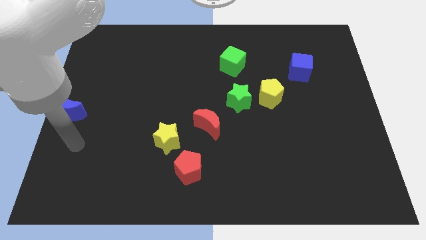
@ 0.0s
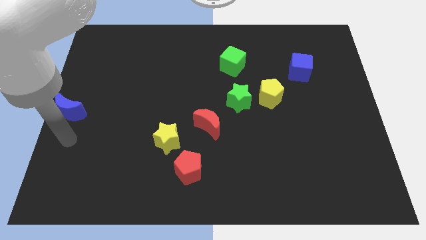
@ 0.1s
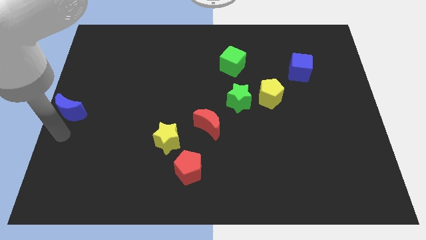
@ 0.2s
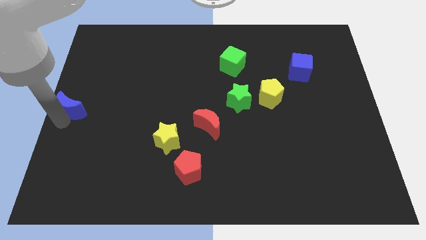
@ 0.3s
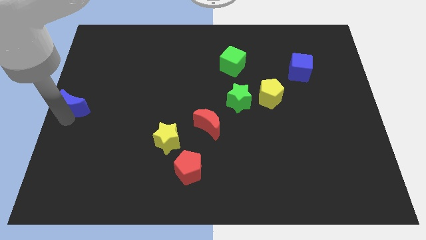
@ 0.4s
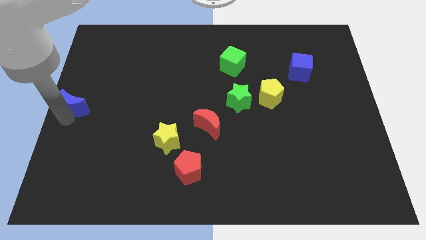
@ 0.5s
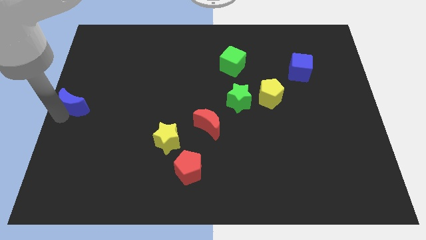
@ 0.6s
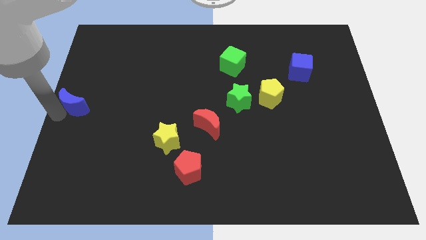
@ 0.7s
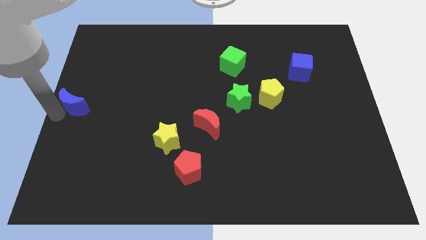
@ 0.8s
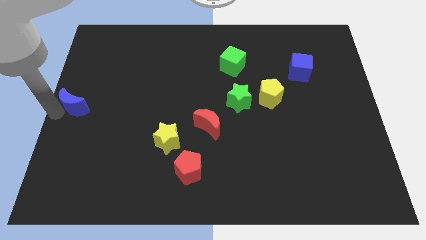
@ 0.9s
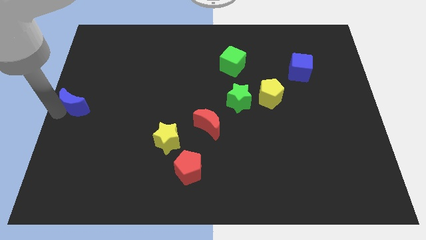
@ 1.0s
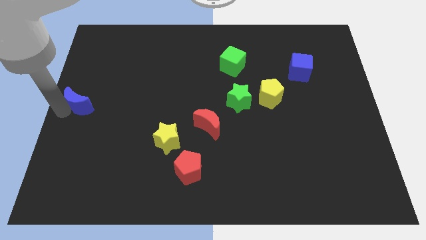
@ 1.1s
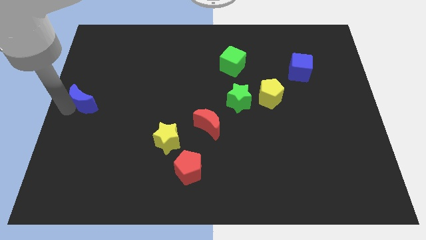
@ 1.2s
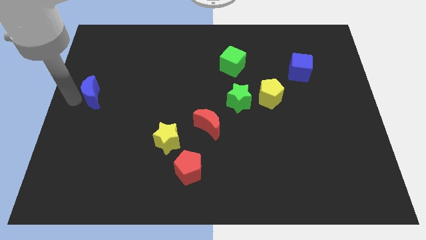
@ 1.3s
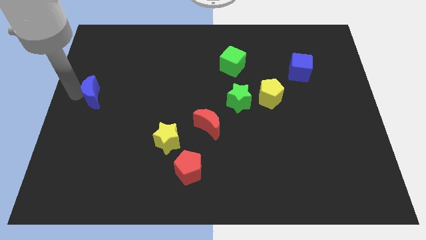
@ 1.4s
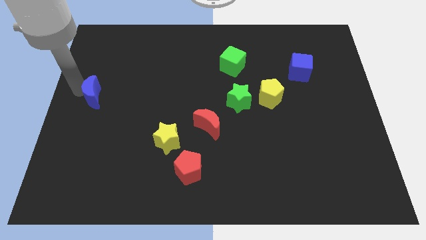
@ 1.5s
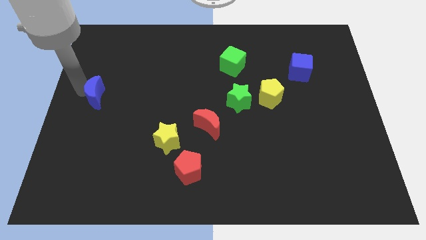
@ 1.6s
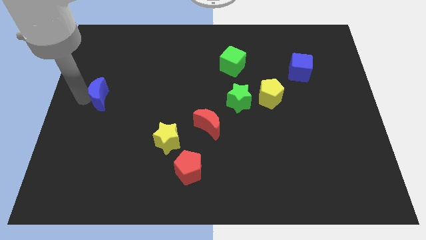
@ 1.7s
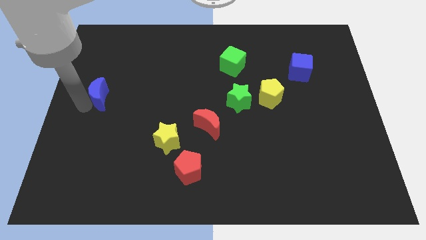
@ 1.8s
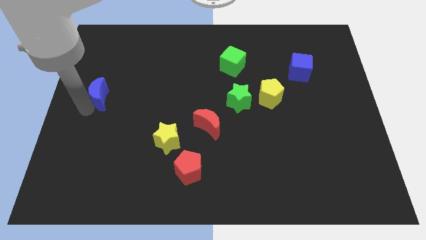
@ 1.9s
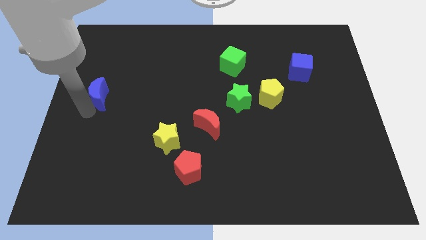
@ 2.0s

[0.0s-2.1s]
place the blue moon at the top of the yellow star

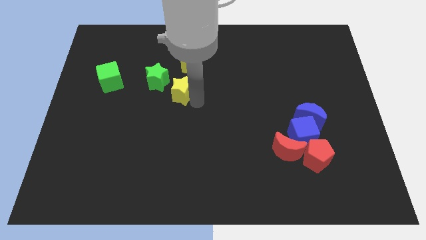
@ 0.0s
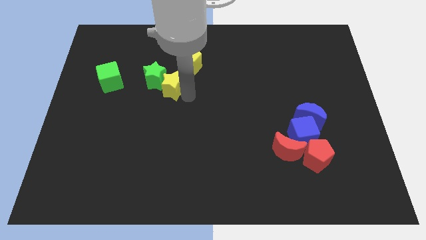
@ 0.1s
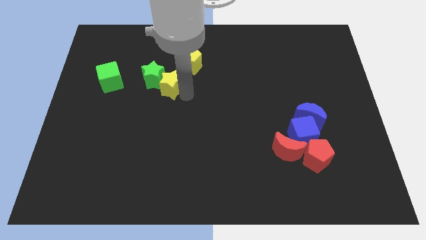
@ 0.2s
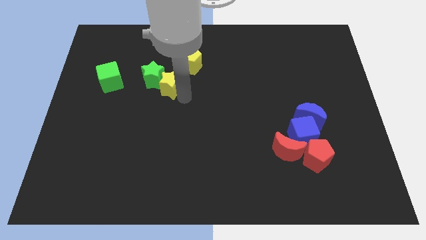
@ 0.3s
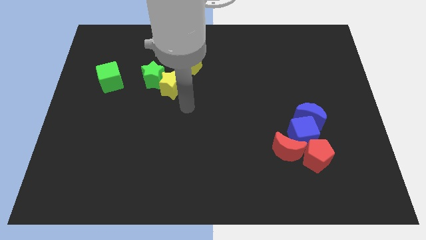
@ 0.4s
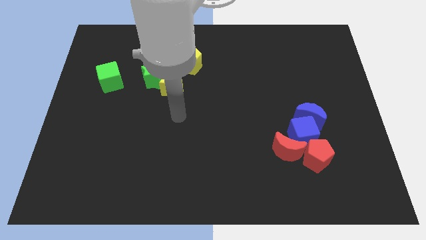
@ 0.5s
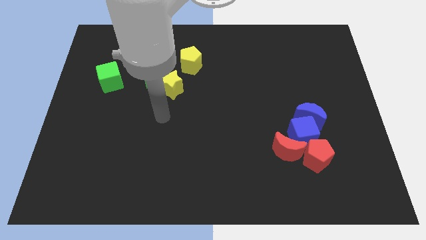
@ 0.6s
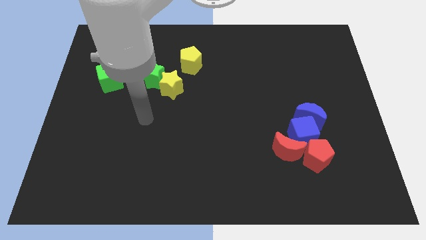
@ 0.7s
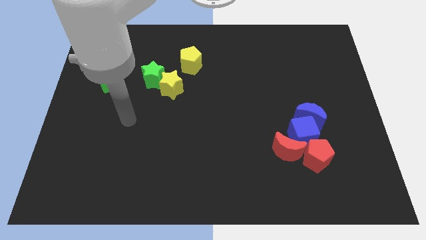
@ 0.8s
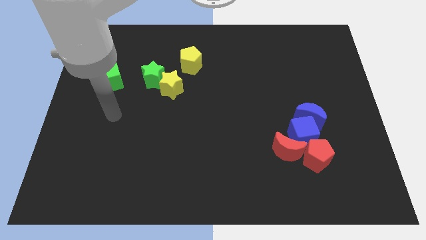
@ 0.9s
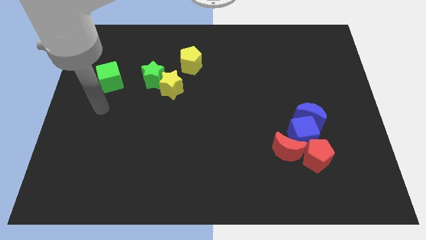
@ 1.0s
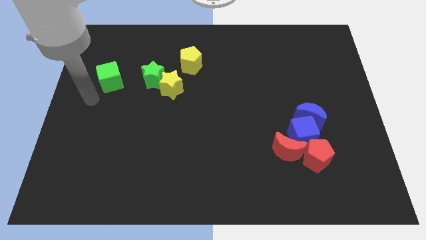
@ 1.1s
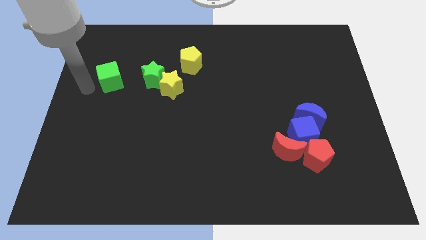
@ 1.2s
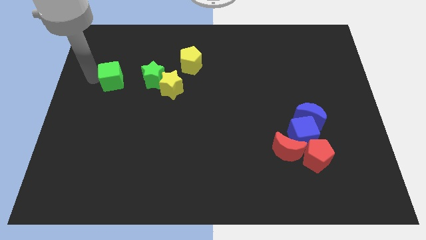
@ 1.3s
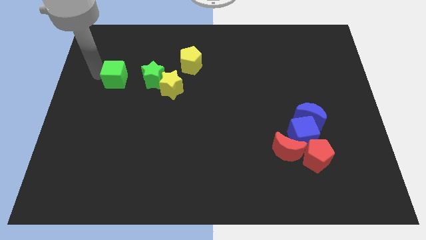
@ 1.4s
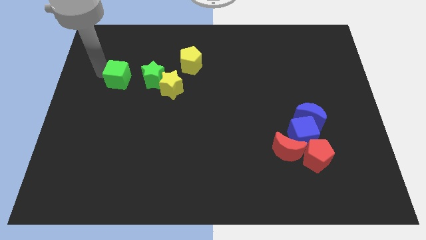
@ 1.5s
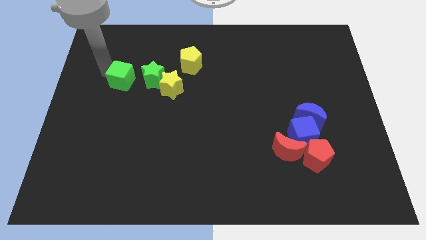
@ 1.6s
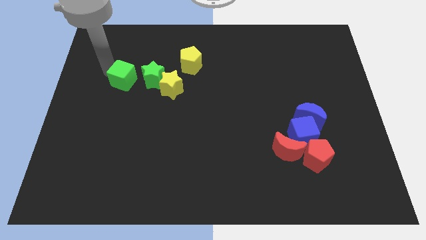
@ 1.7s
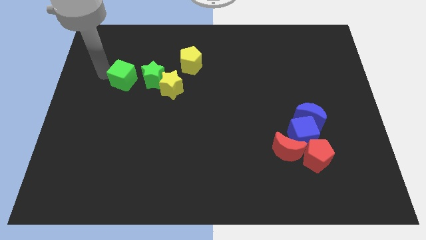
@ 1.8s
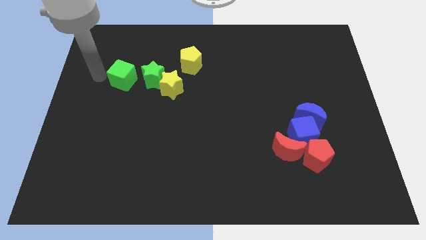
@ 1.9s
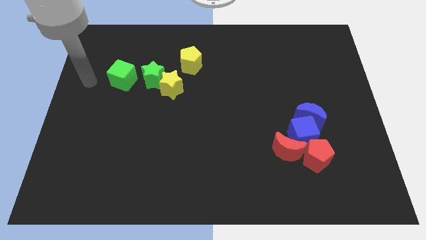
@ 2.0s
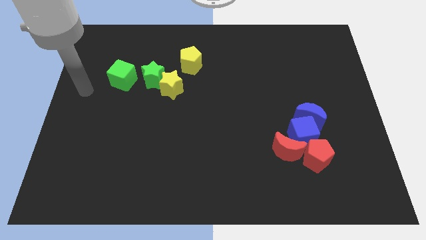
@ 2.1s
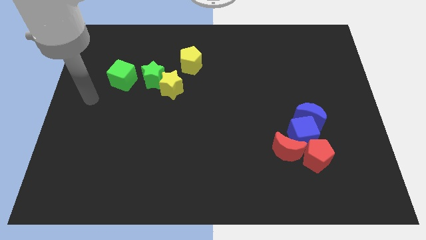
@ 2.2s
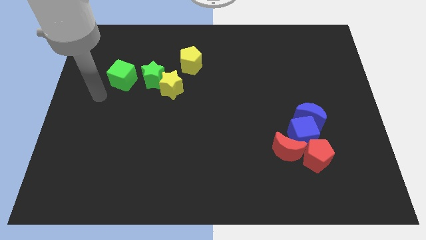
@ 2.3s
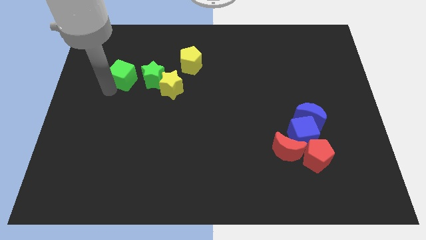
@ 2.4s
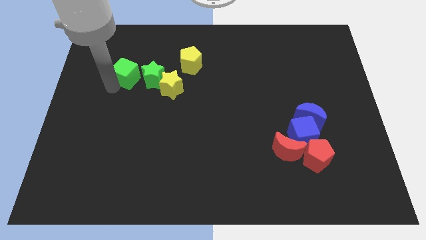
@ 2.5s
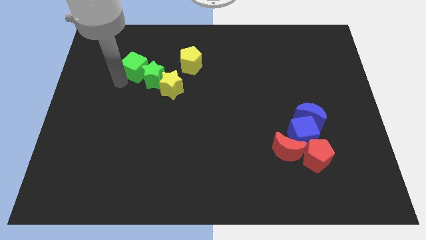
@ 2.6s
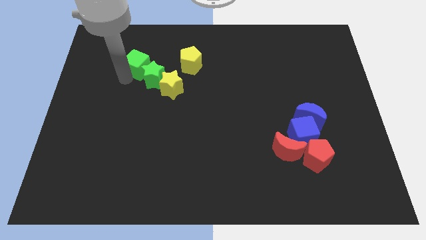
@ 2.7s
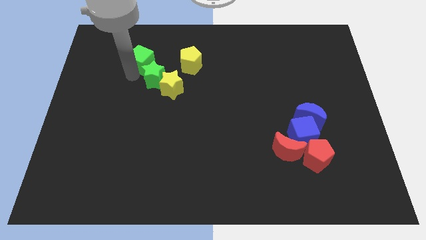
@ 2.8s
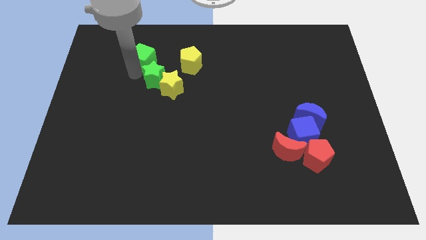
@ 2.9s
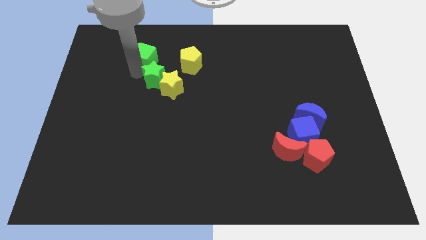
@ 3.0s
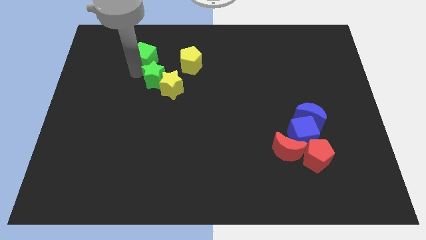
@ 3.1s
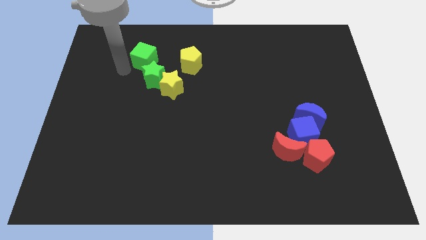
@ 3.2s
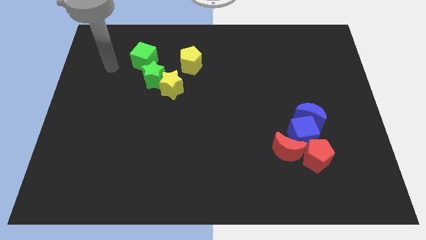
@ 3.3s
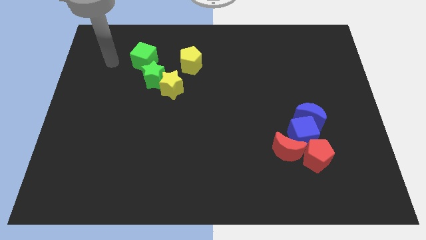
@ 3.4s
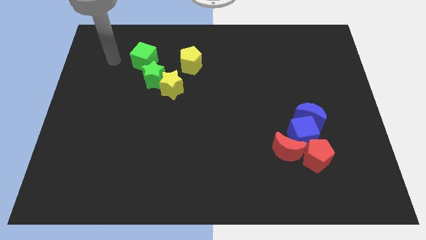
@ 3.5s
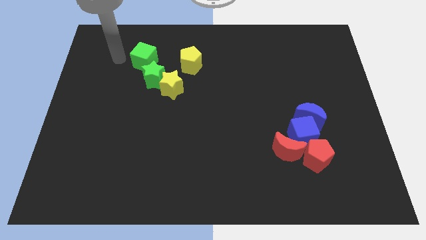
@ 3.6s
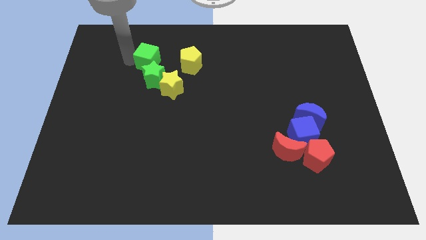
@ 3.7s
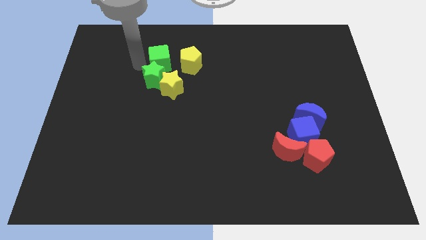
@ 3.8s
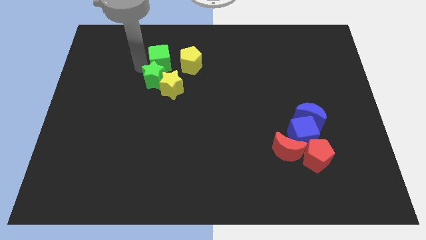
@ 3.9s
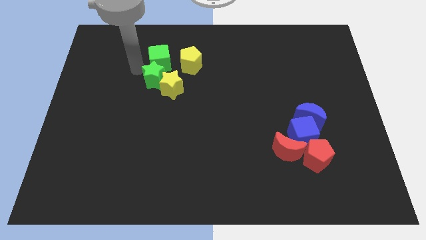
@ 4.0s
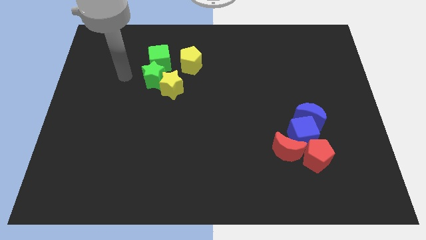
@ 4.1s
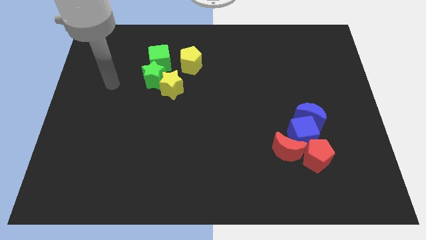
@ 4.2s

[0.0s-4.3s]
move the yellow star and the green cube into the green star

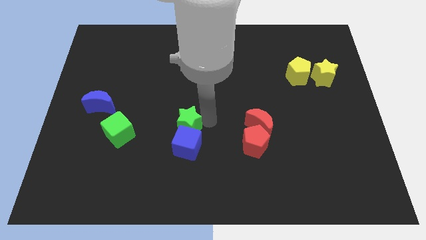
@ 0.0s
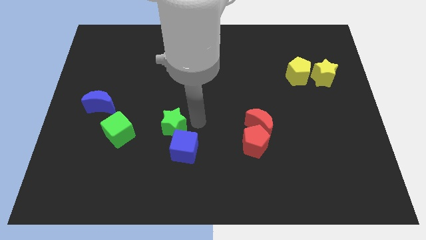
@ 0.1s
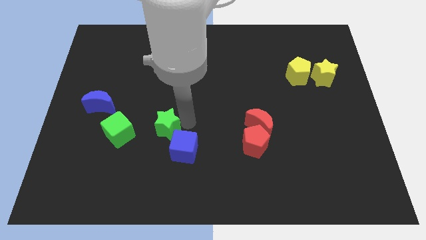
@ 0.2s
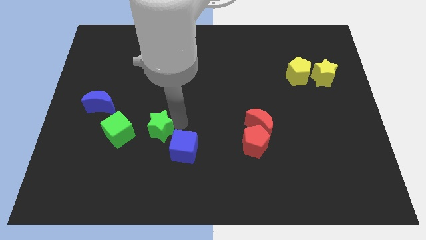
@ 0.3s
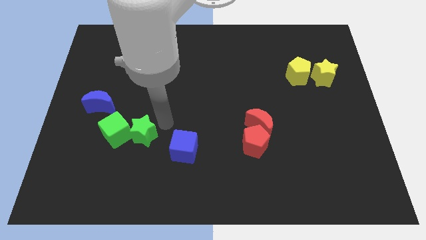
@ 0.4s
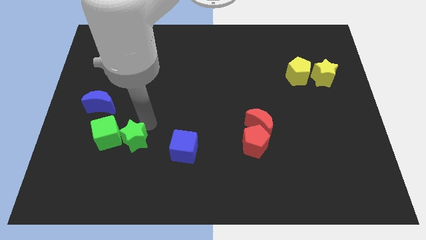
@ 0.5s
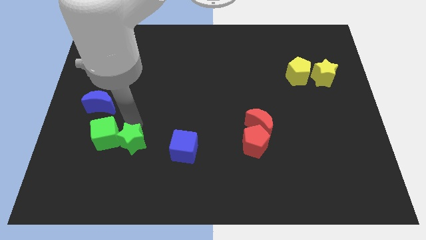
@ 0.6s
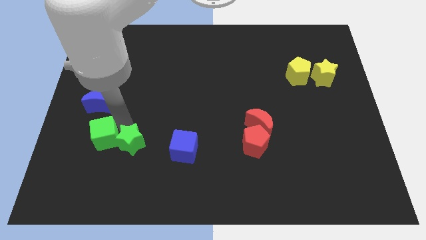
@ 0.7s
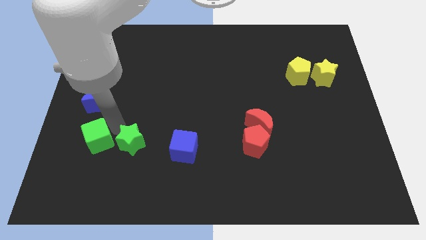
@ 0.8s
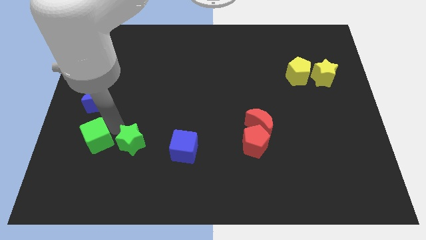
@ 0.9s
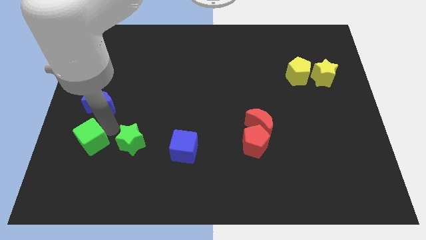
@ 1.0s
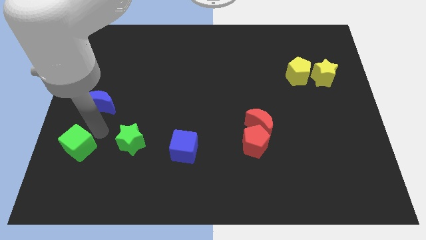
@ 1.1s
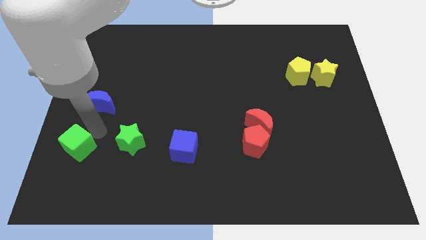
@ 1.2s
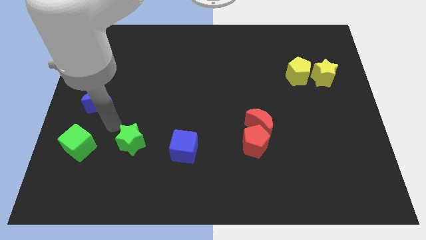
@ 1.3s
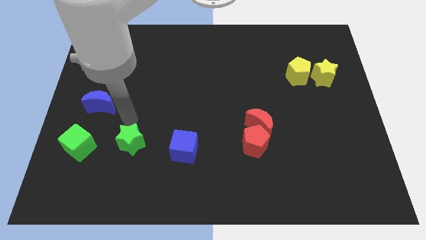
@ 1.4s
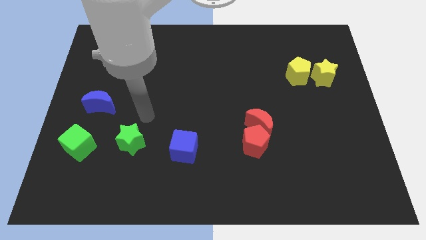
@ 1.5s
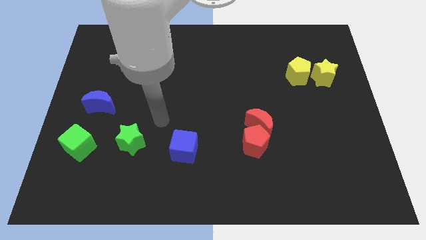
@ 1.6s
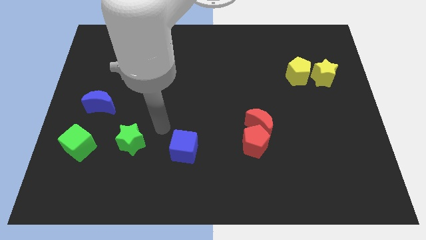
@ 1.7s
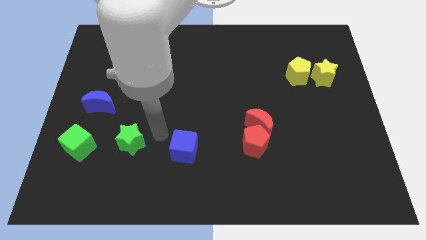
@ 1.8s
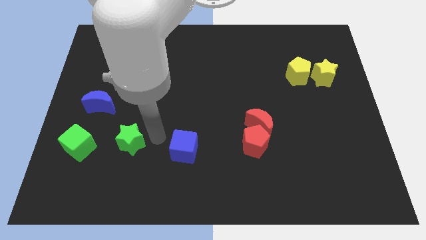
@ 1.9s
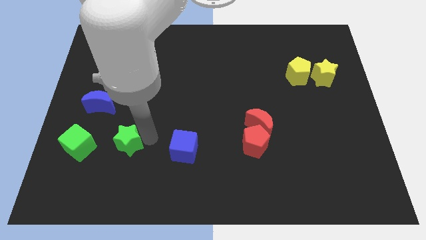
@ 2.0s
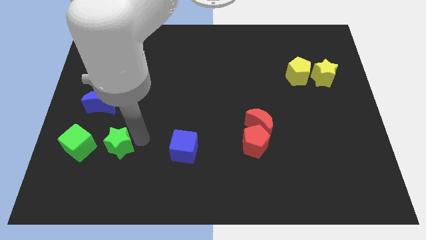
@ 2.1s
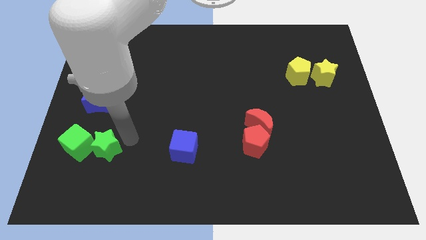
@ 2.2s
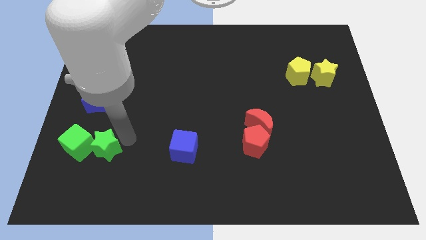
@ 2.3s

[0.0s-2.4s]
place green blocks vertically to the bottom of blue crescent
